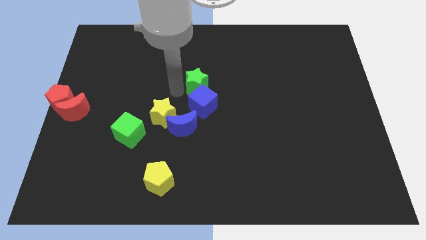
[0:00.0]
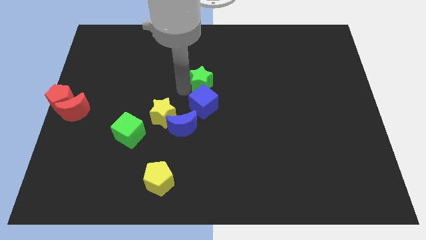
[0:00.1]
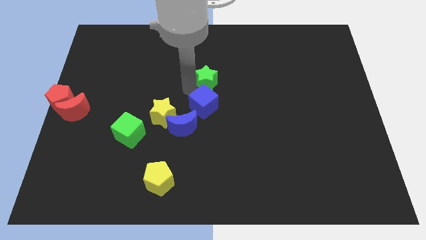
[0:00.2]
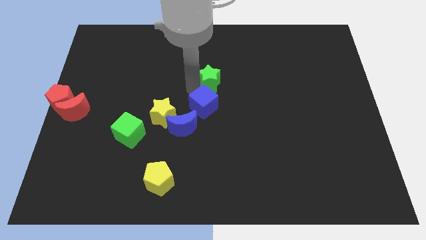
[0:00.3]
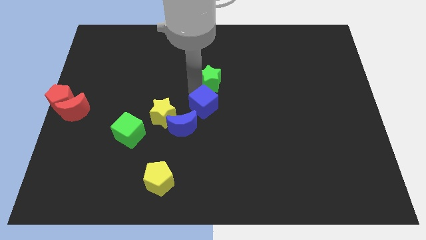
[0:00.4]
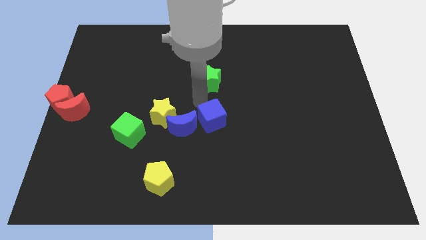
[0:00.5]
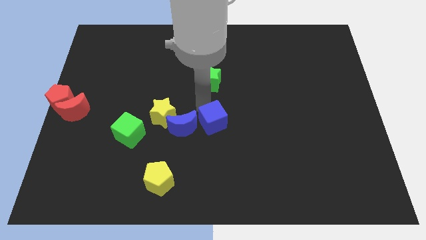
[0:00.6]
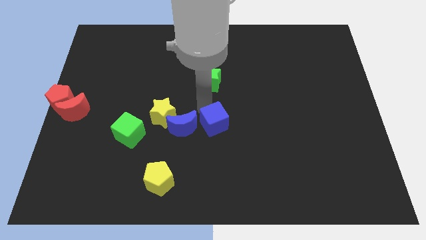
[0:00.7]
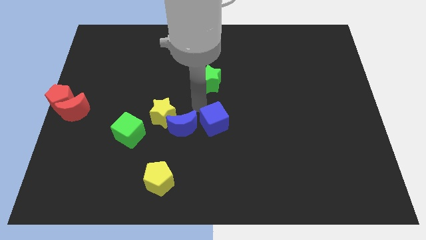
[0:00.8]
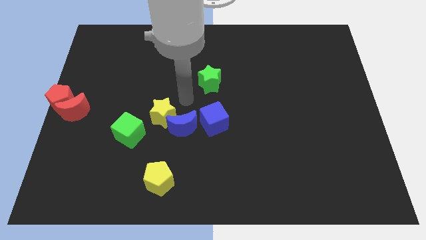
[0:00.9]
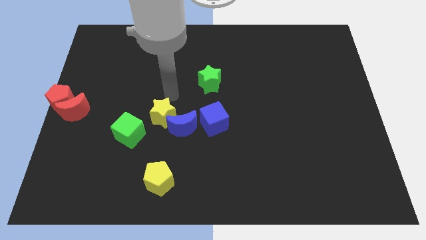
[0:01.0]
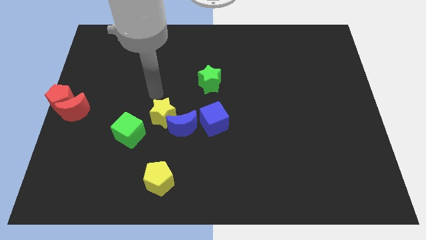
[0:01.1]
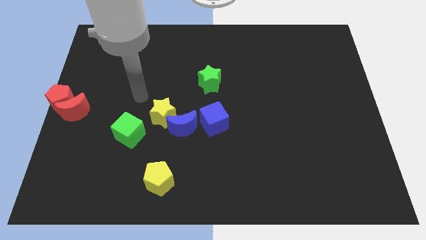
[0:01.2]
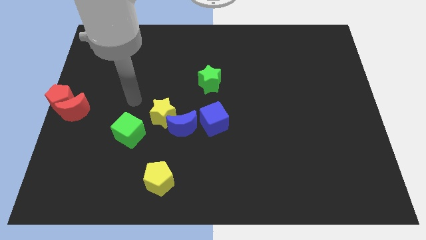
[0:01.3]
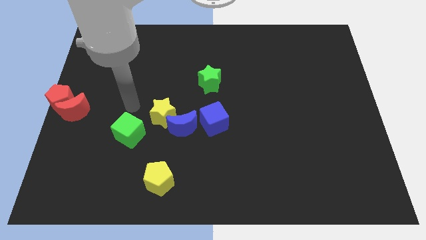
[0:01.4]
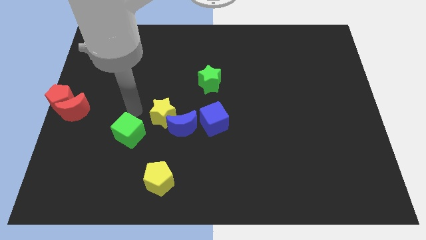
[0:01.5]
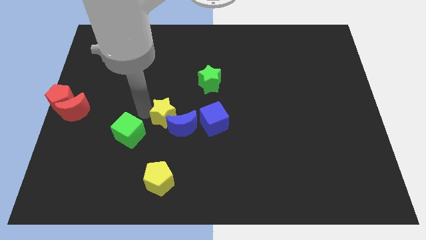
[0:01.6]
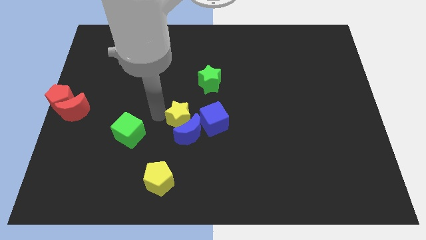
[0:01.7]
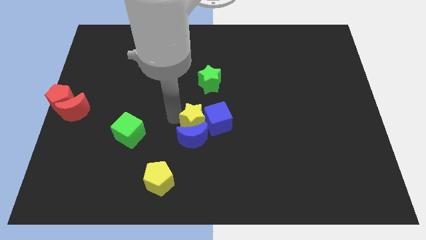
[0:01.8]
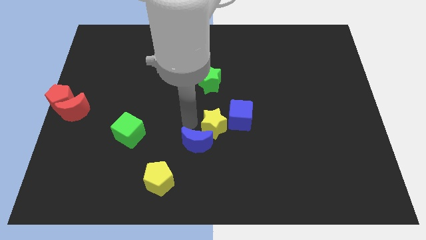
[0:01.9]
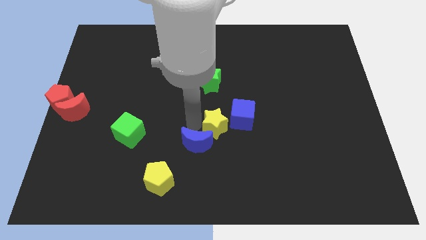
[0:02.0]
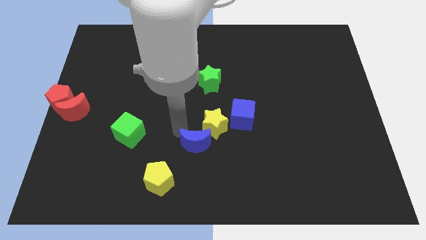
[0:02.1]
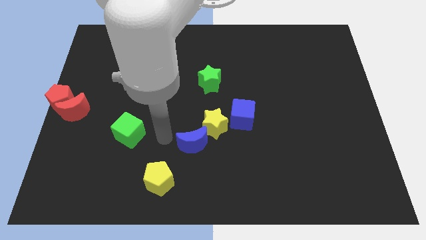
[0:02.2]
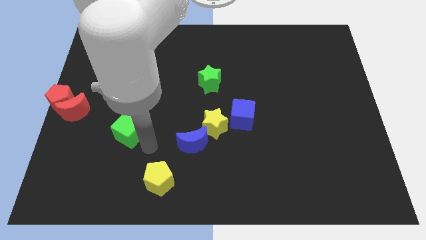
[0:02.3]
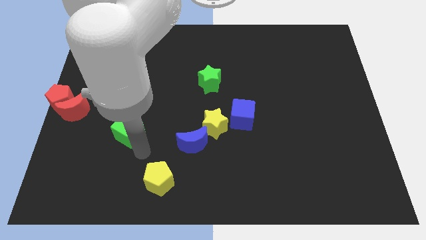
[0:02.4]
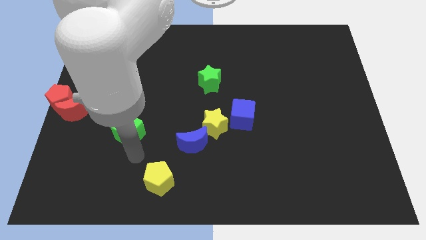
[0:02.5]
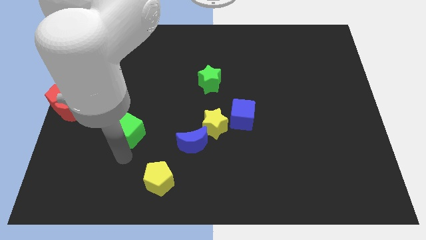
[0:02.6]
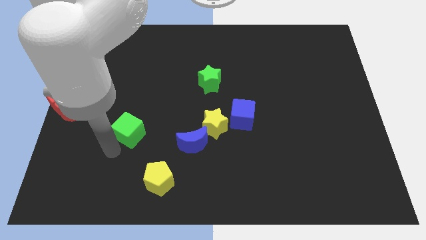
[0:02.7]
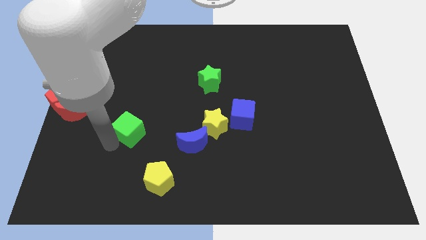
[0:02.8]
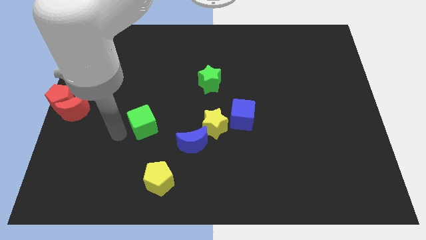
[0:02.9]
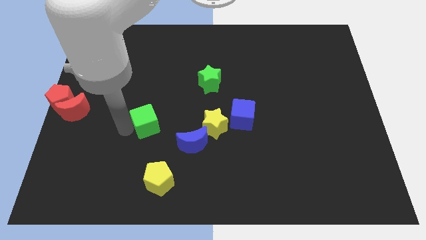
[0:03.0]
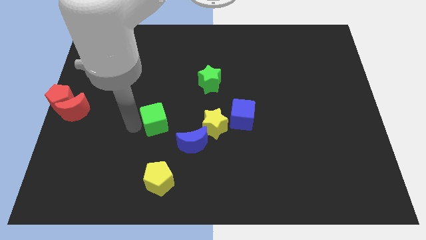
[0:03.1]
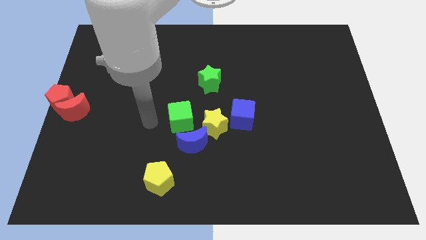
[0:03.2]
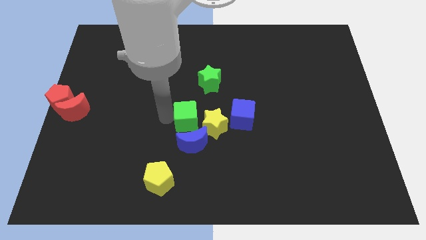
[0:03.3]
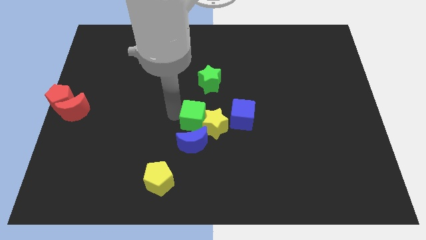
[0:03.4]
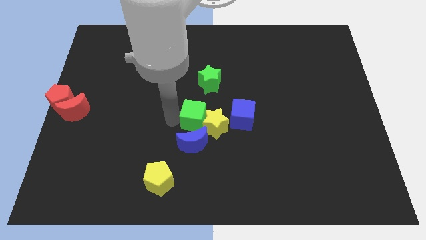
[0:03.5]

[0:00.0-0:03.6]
push the green cube to the left side of the yellow star

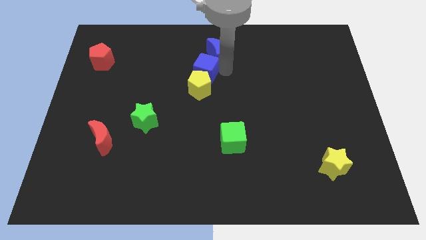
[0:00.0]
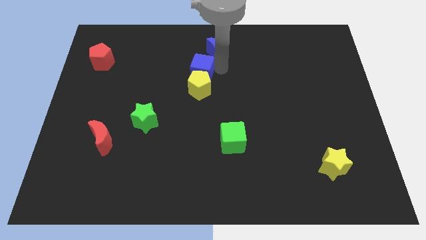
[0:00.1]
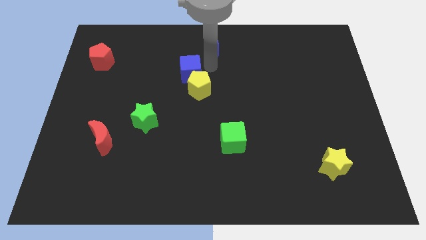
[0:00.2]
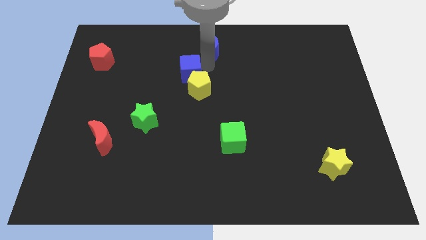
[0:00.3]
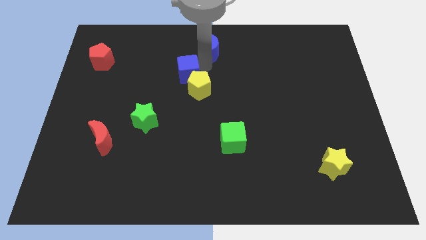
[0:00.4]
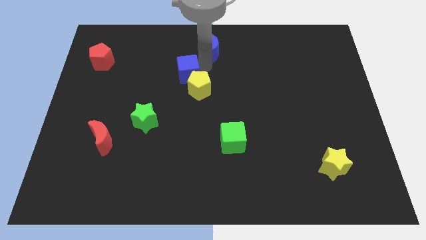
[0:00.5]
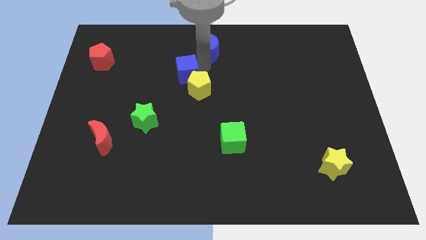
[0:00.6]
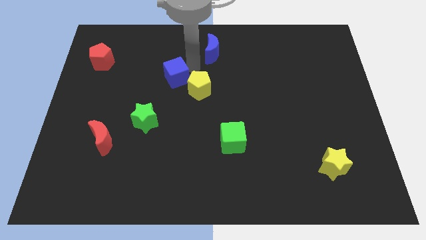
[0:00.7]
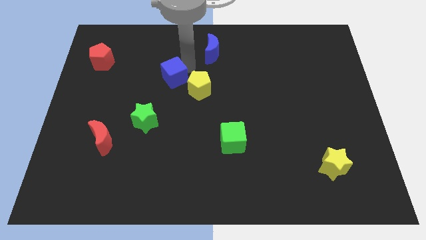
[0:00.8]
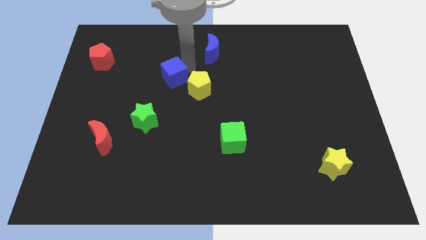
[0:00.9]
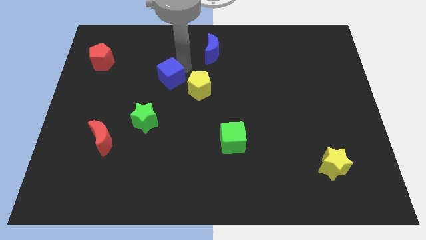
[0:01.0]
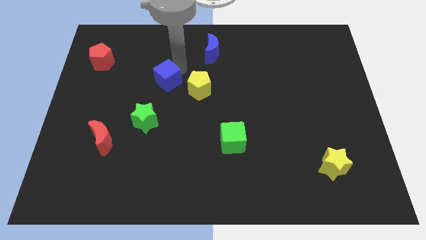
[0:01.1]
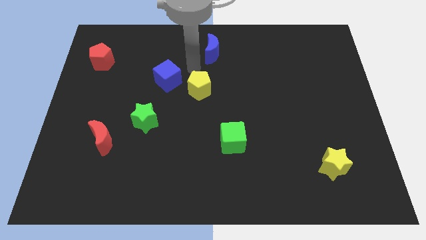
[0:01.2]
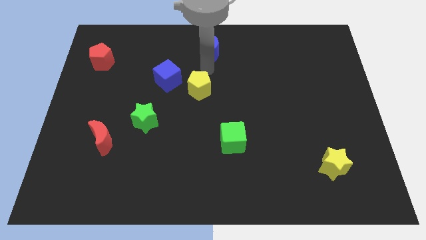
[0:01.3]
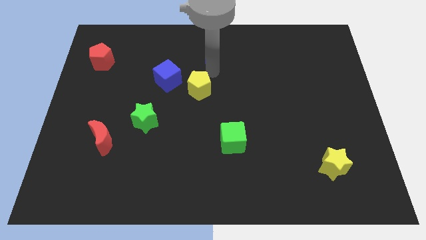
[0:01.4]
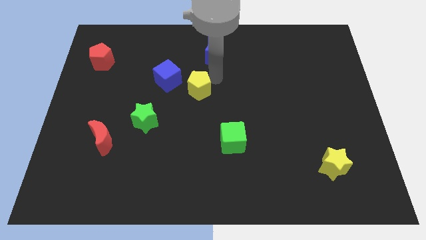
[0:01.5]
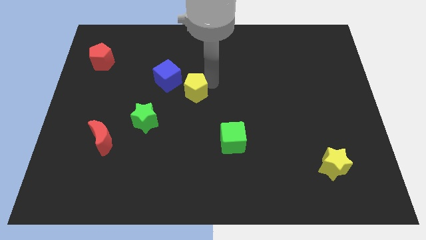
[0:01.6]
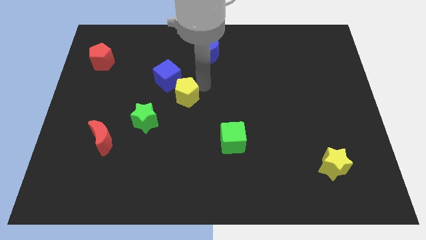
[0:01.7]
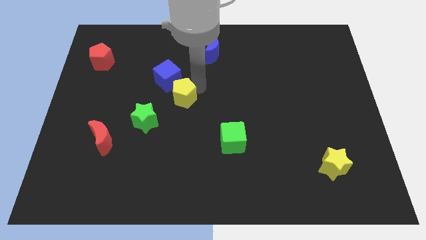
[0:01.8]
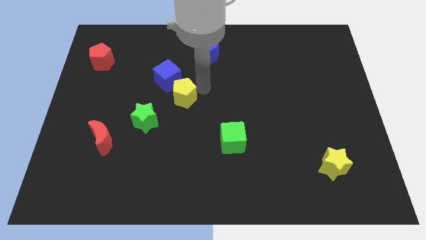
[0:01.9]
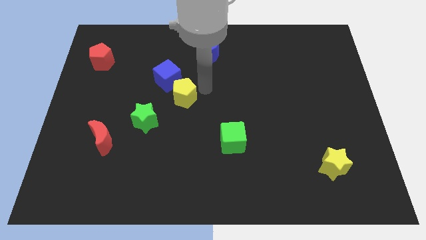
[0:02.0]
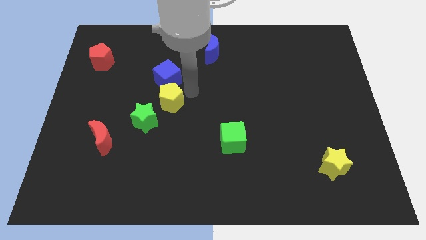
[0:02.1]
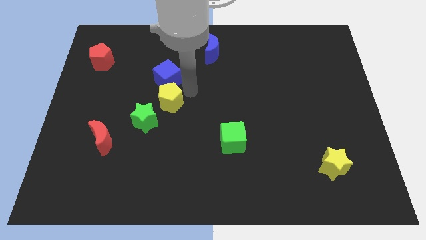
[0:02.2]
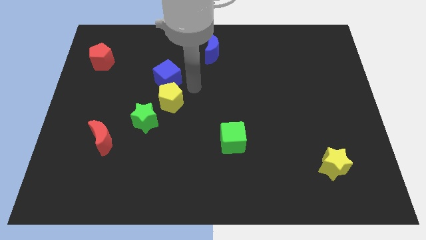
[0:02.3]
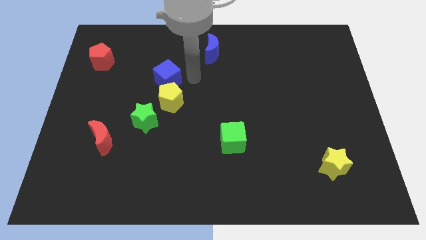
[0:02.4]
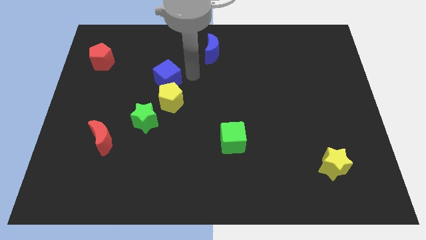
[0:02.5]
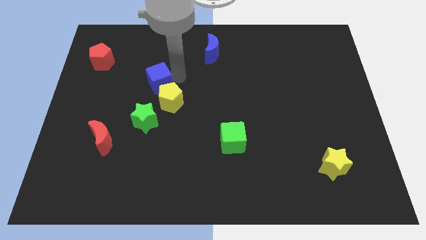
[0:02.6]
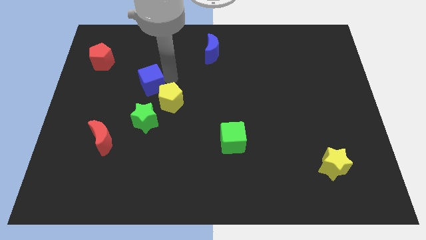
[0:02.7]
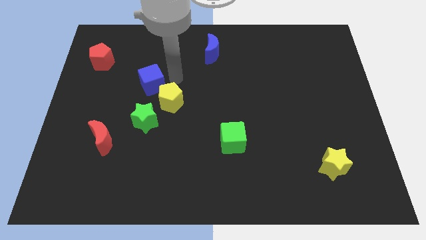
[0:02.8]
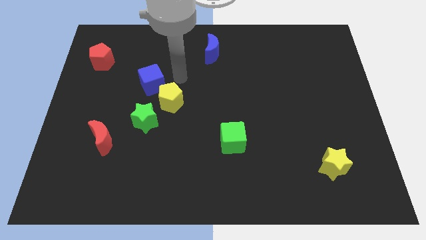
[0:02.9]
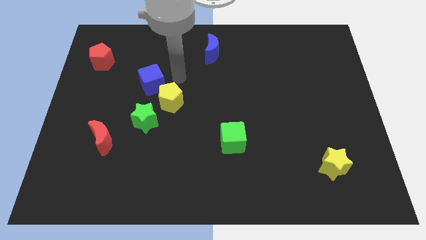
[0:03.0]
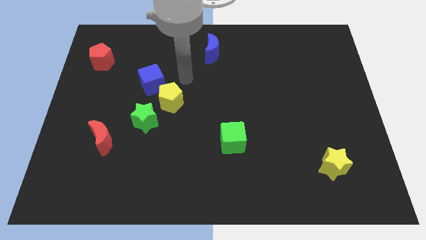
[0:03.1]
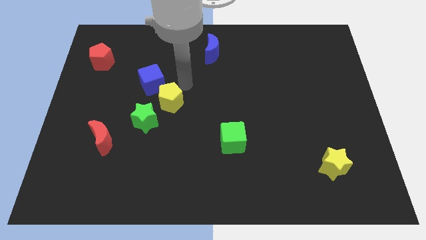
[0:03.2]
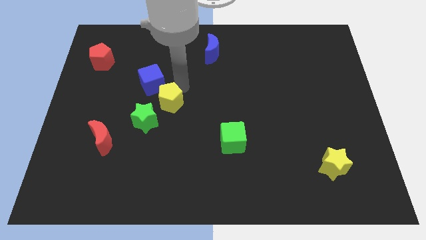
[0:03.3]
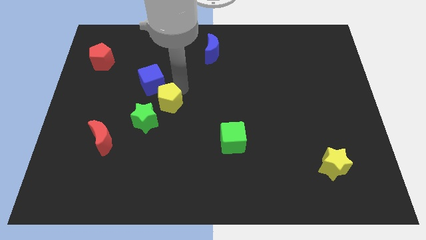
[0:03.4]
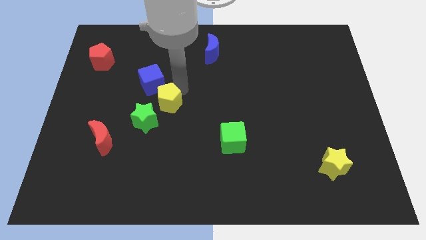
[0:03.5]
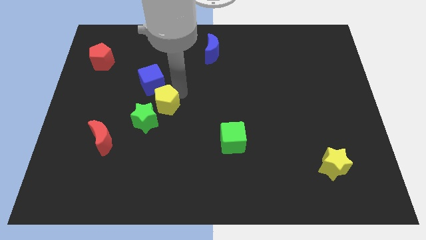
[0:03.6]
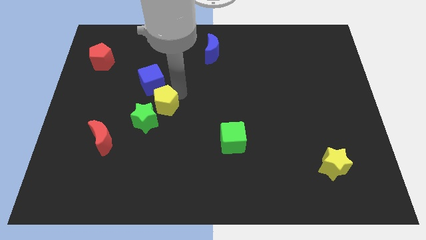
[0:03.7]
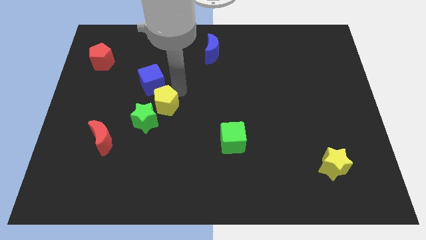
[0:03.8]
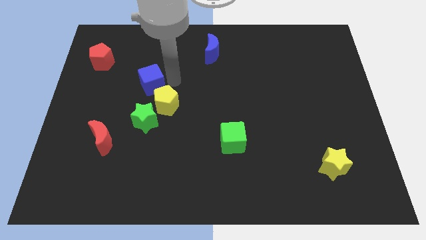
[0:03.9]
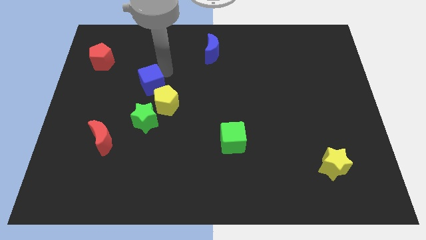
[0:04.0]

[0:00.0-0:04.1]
push blue cube and yellow away from blue crescent

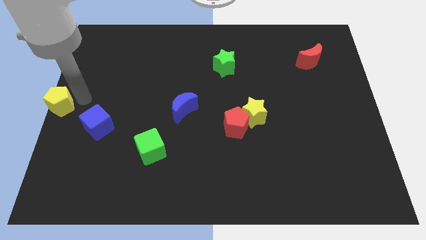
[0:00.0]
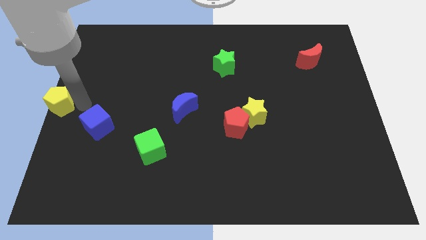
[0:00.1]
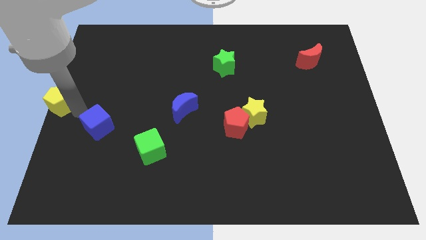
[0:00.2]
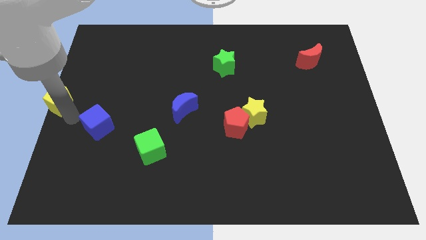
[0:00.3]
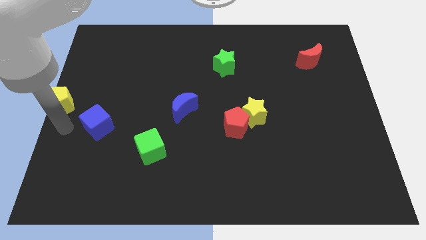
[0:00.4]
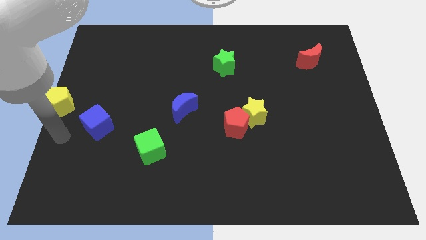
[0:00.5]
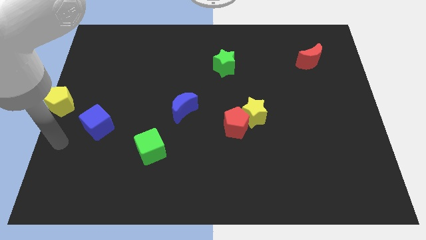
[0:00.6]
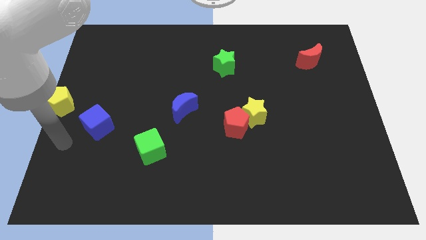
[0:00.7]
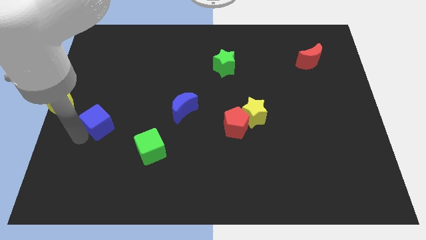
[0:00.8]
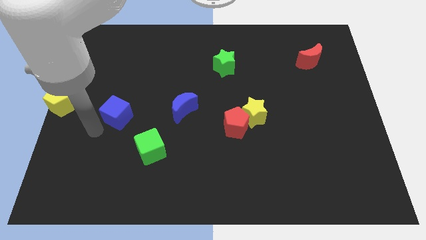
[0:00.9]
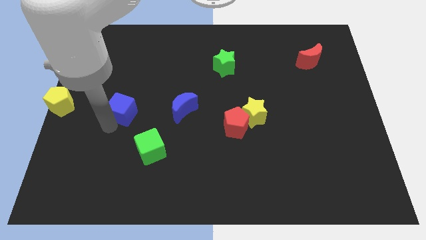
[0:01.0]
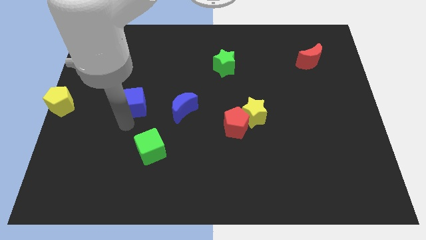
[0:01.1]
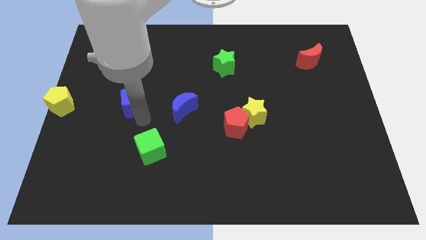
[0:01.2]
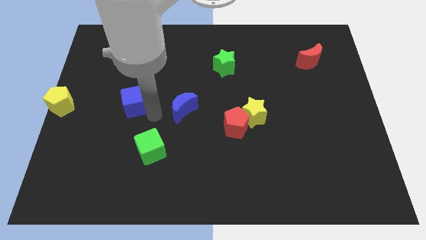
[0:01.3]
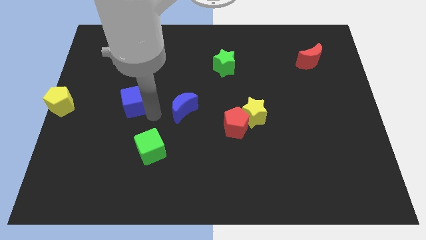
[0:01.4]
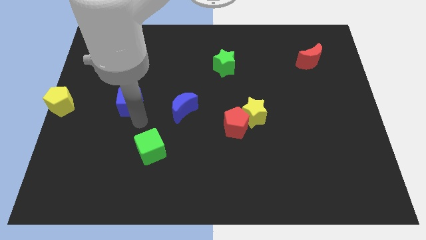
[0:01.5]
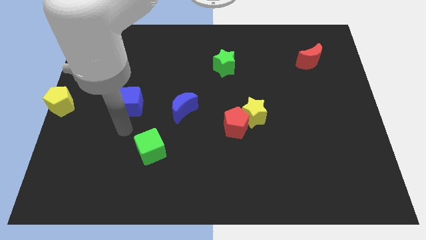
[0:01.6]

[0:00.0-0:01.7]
place the blue cube into the blue moon
